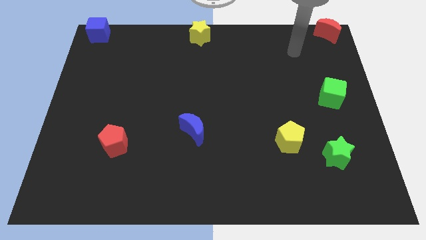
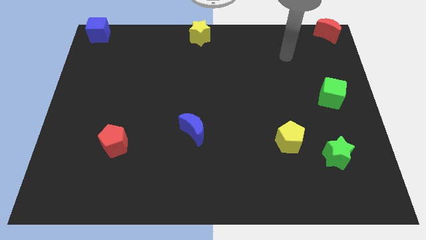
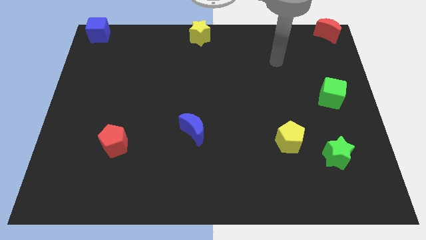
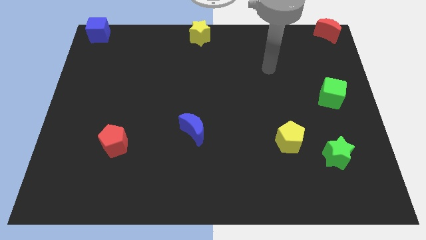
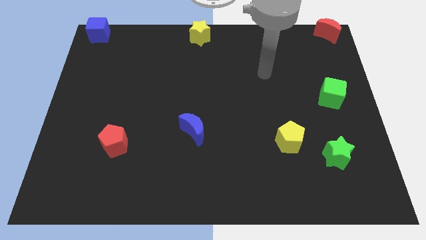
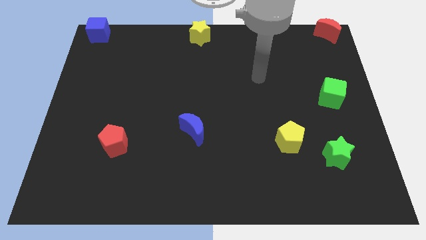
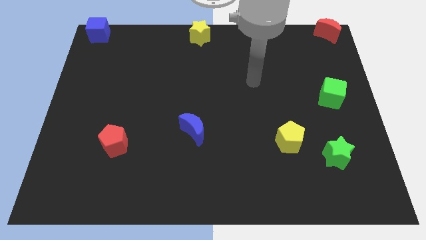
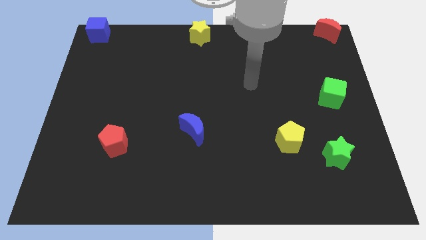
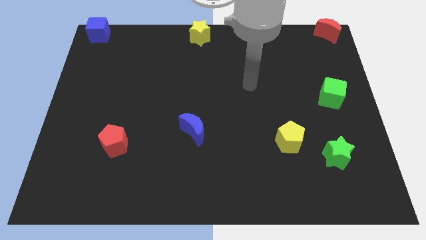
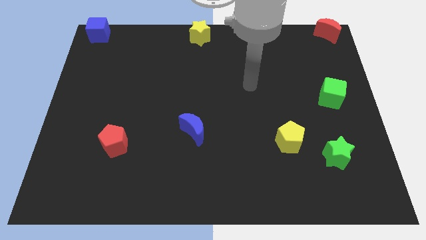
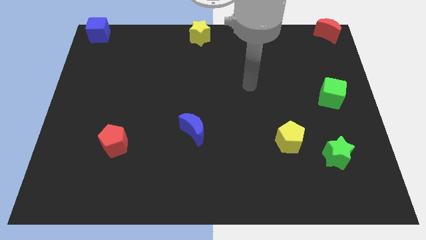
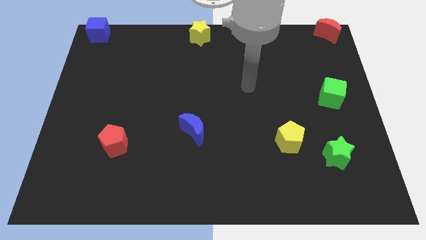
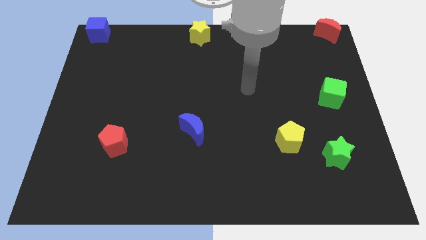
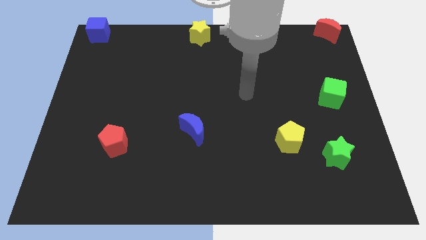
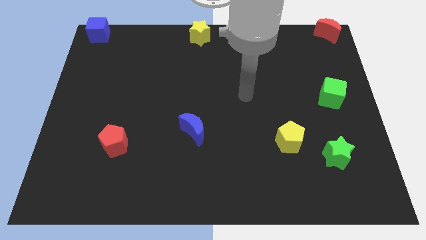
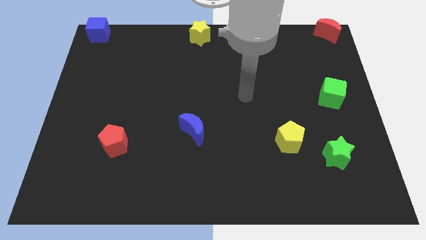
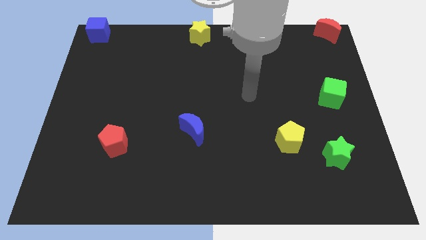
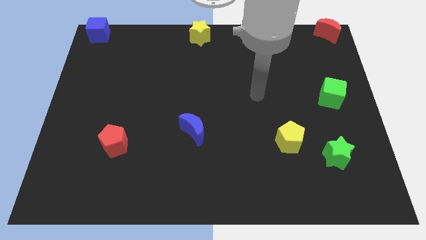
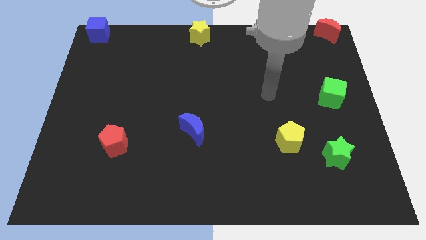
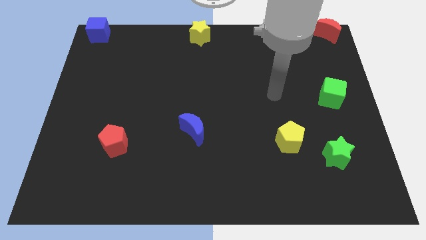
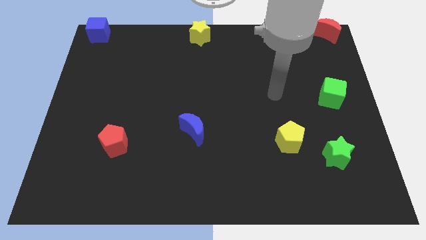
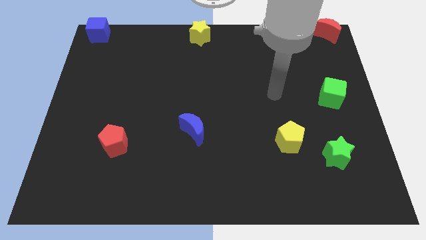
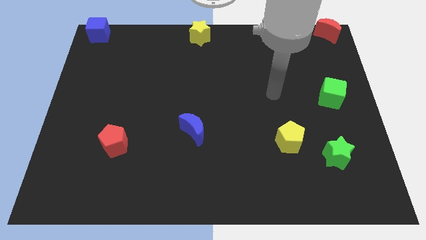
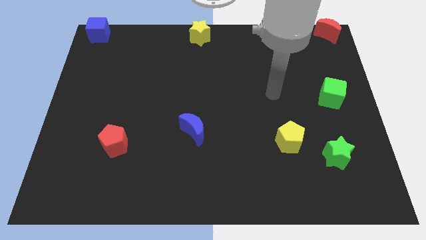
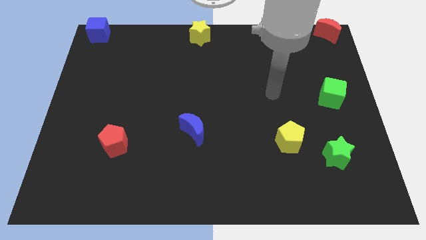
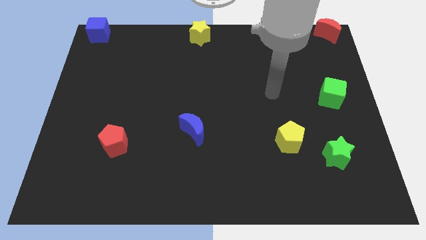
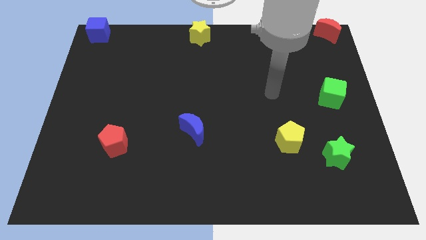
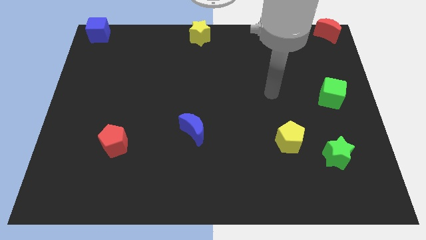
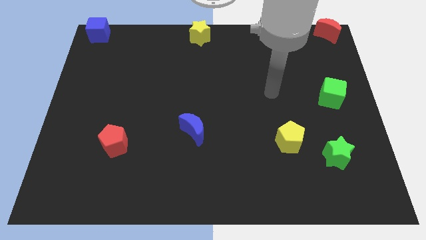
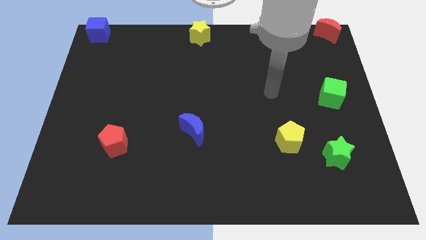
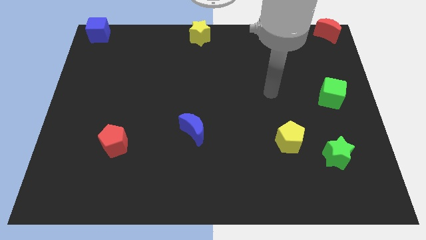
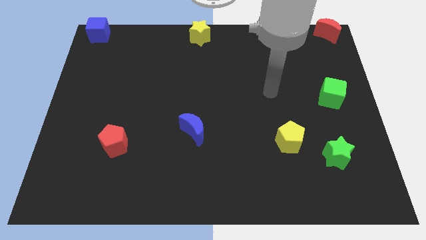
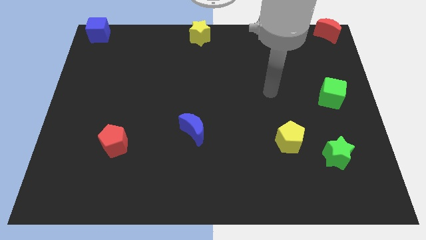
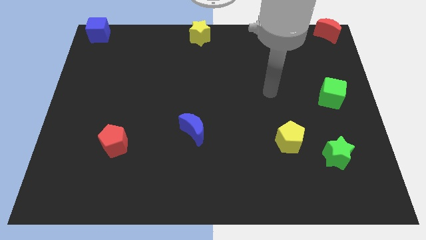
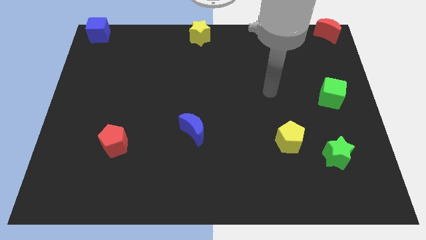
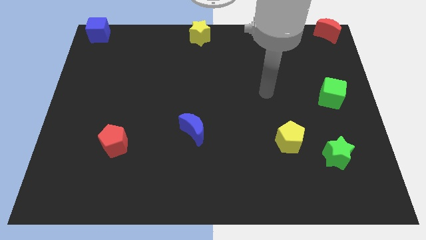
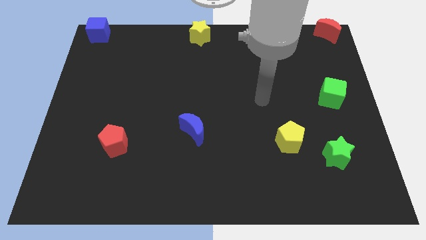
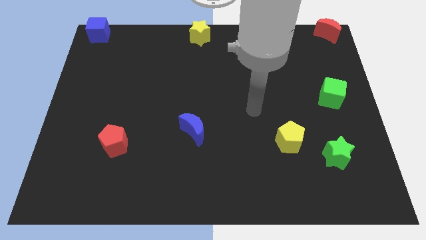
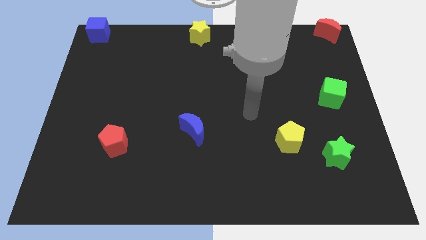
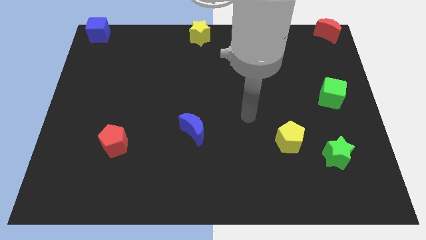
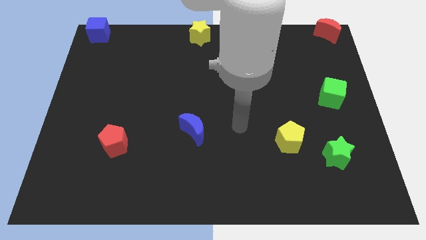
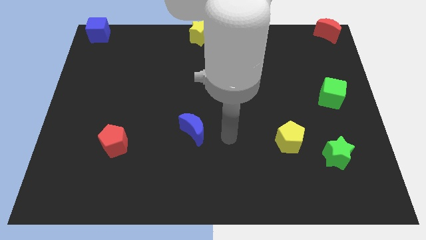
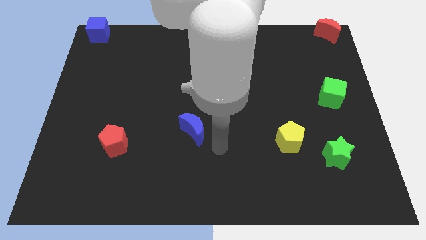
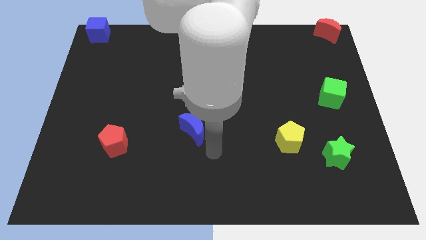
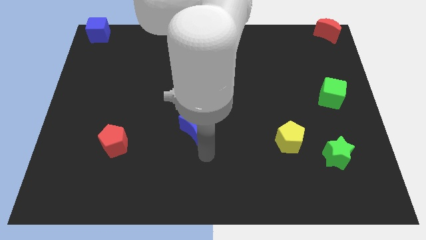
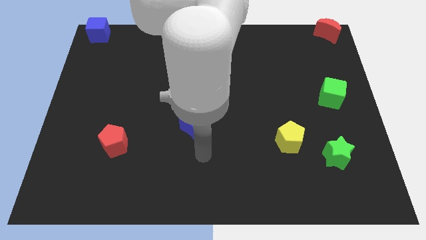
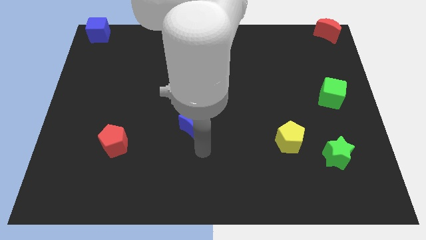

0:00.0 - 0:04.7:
move the arm towards the blue crescent

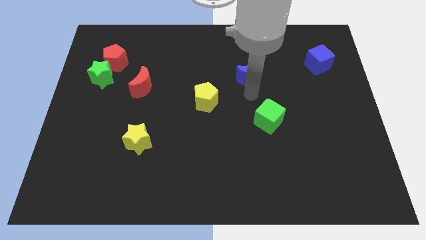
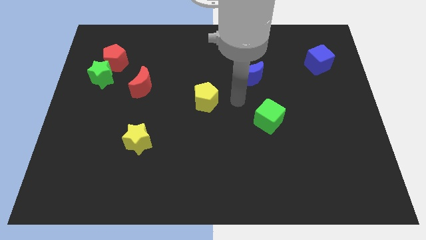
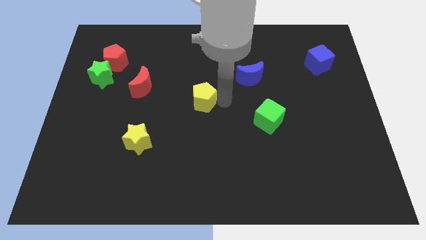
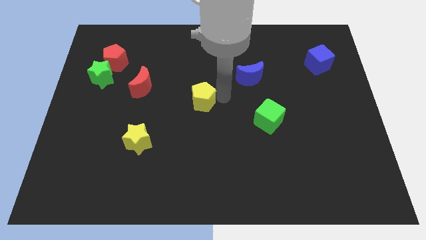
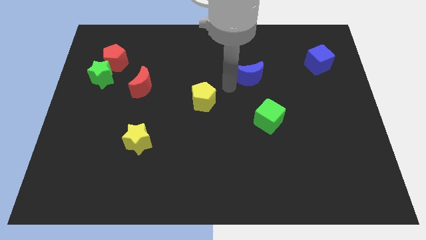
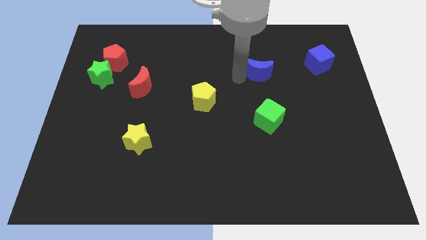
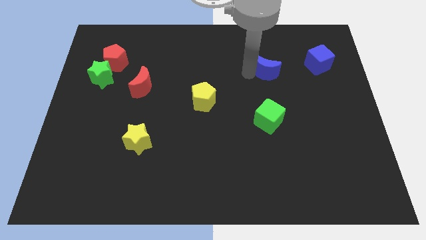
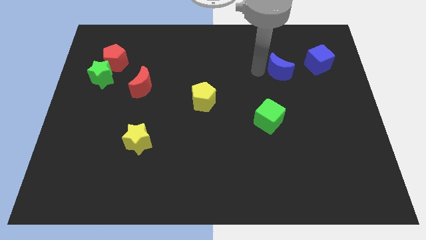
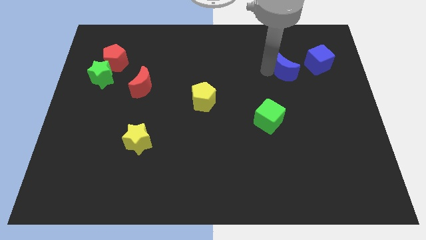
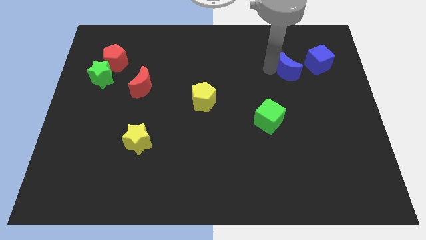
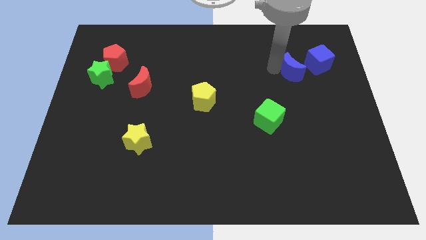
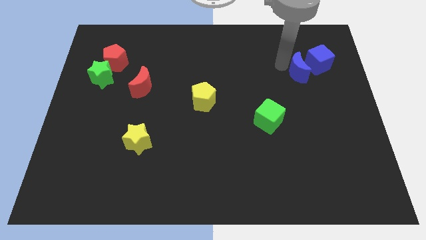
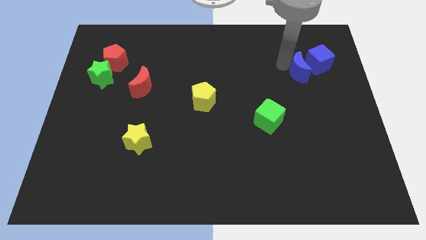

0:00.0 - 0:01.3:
push the blue crescent towards the left side of the blue cube

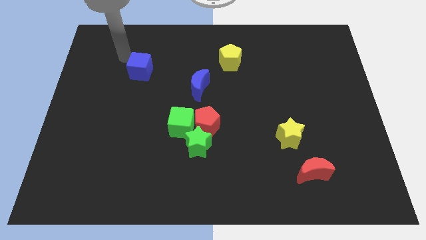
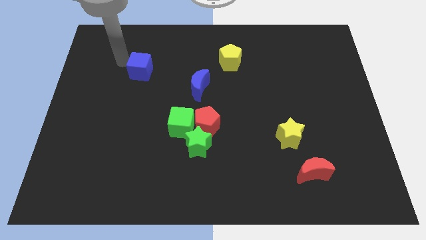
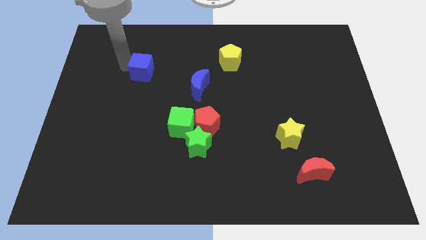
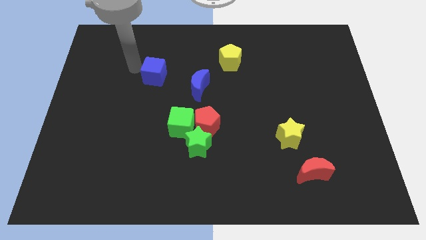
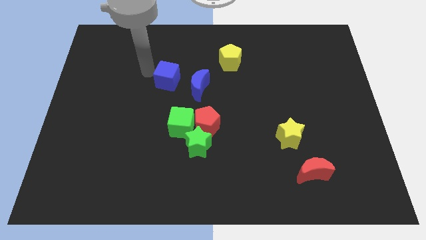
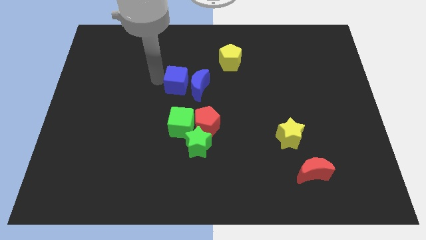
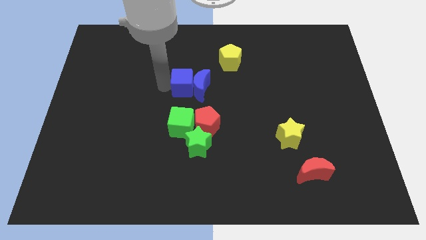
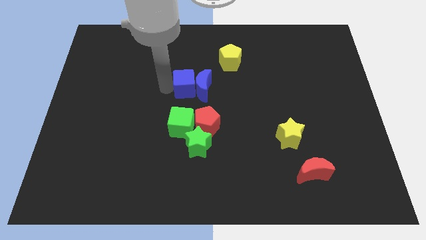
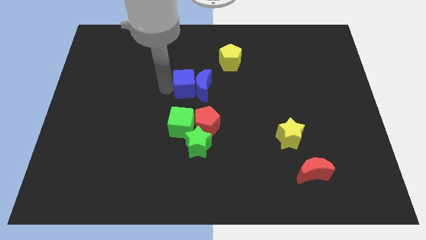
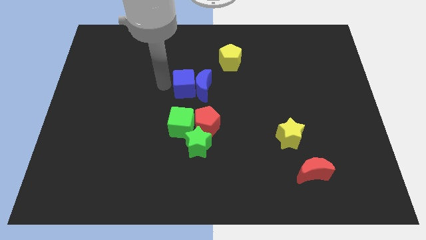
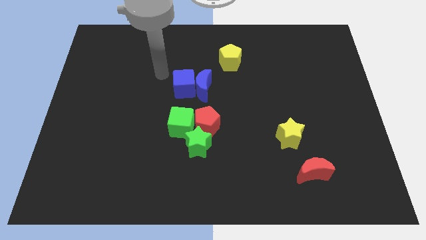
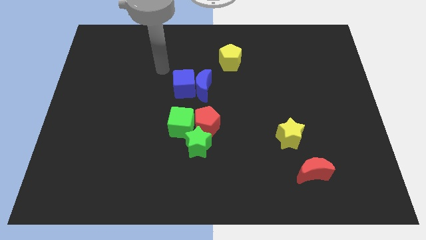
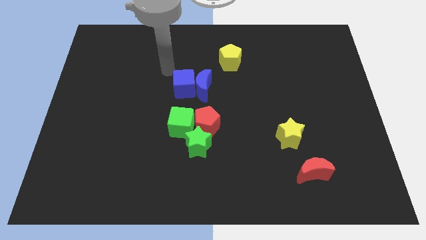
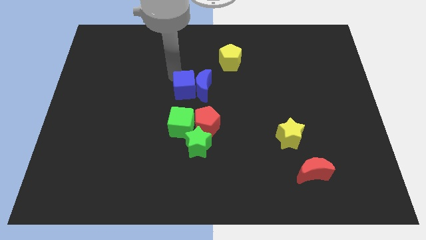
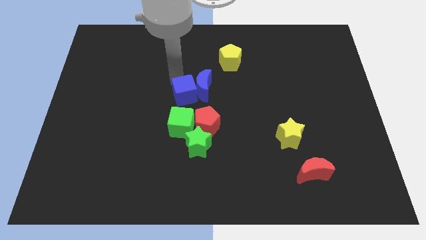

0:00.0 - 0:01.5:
put the blue cube close left of the blue moon

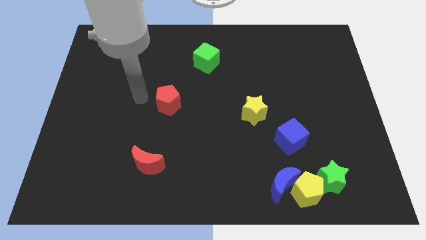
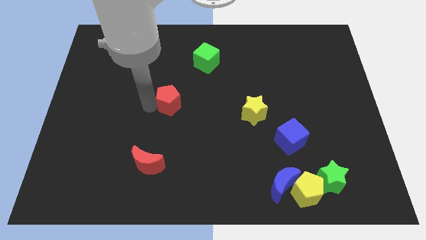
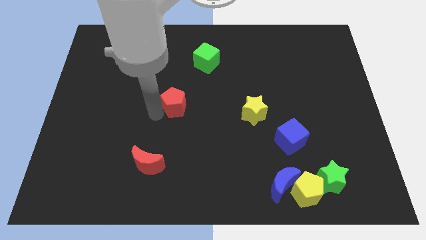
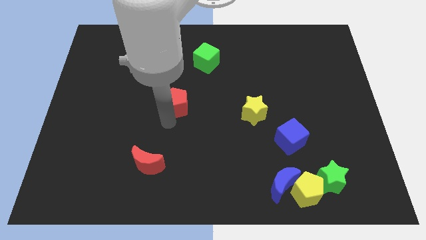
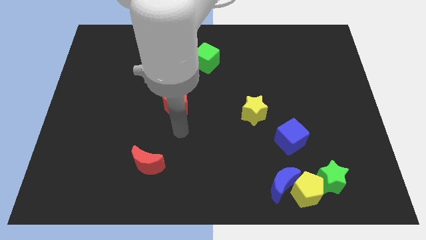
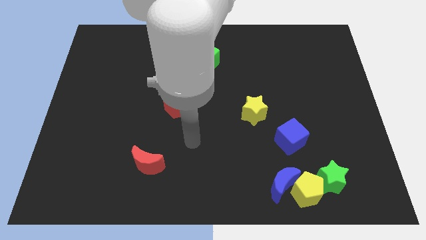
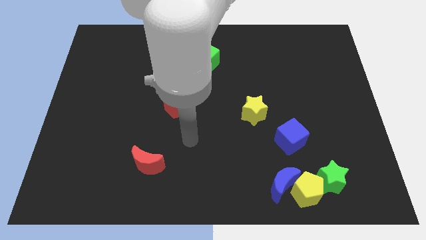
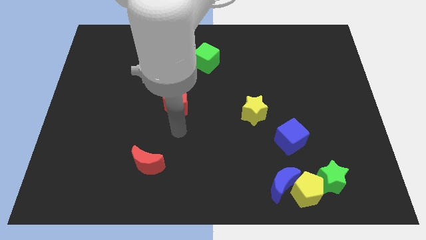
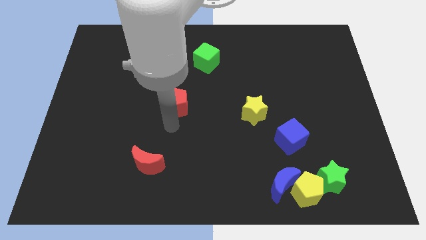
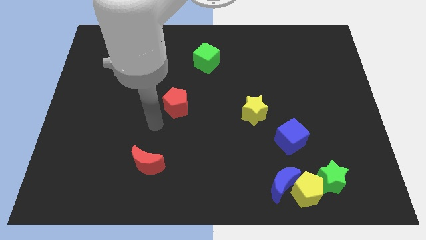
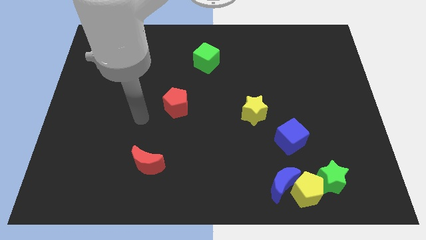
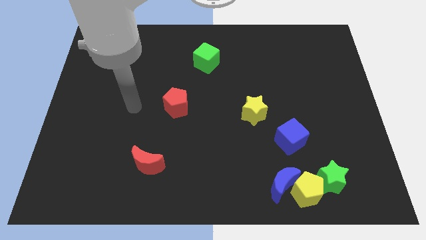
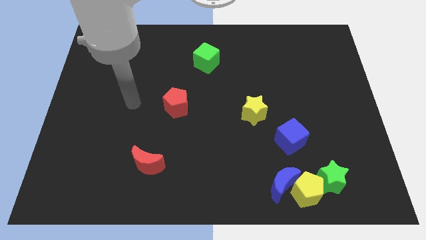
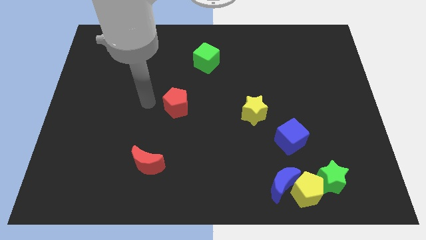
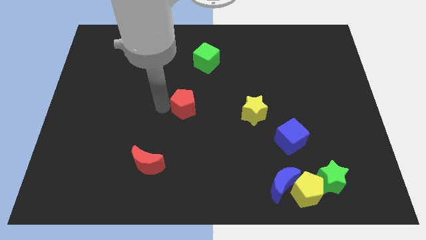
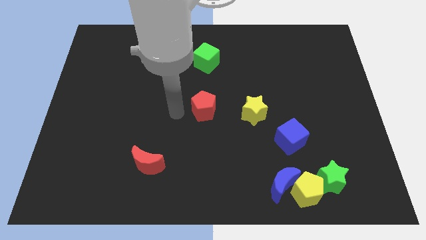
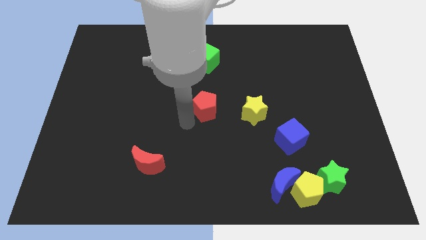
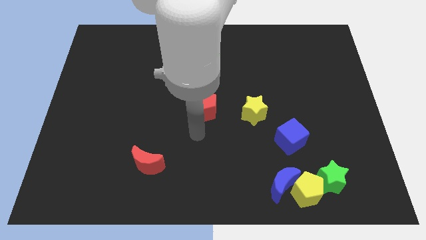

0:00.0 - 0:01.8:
put the red pentagon vertically below the green cube
